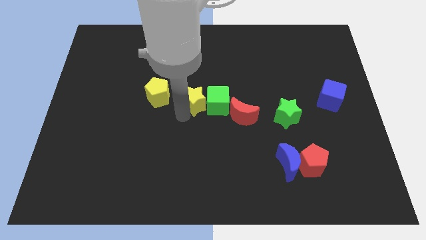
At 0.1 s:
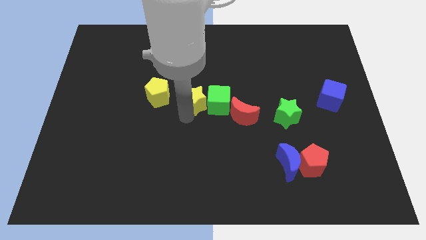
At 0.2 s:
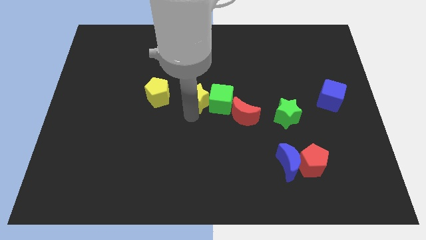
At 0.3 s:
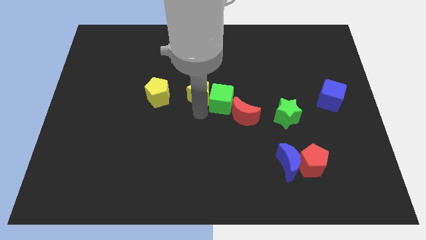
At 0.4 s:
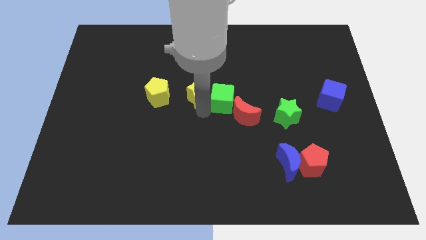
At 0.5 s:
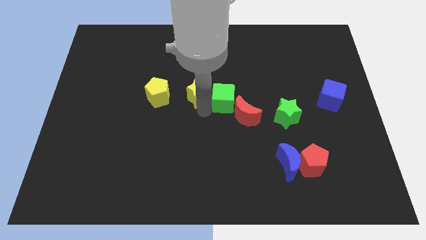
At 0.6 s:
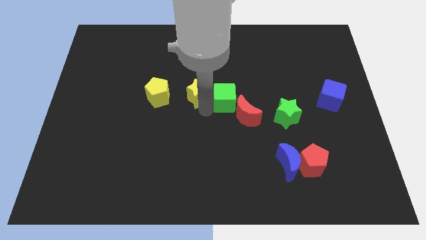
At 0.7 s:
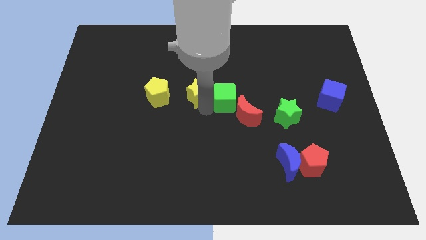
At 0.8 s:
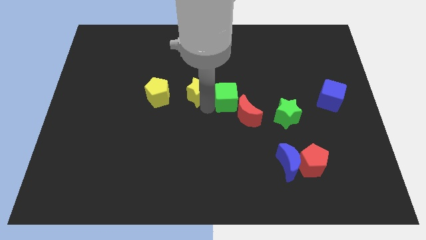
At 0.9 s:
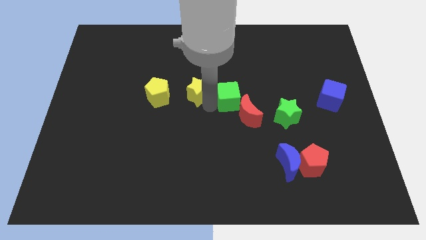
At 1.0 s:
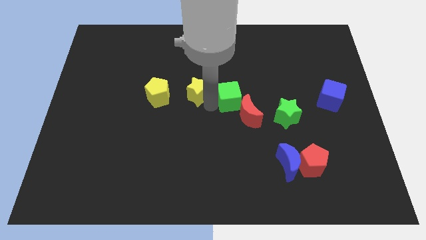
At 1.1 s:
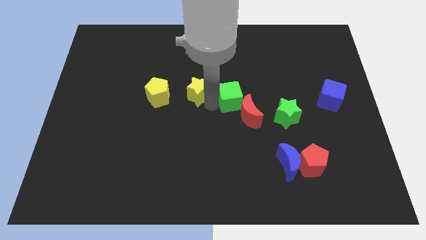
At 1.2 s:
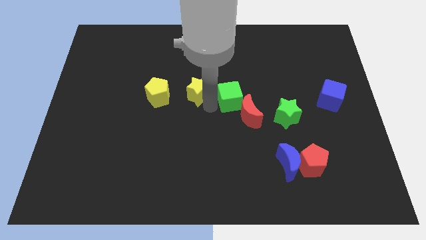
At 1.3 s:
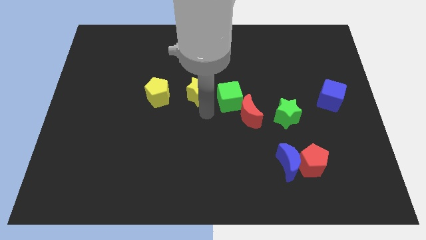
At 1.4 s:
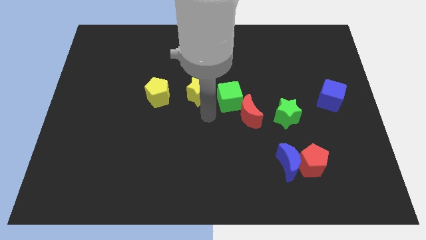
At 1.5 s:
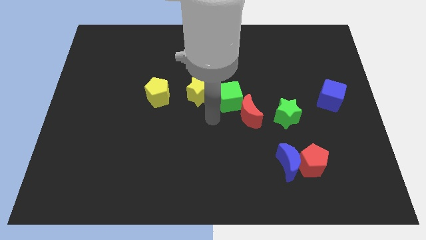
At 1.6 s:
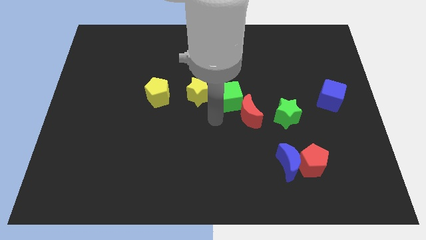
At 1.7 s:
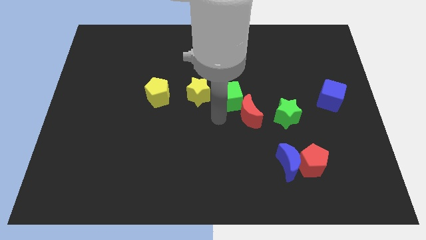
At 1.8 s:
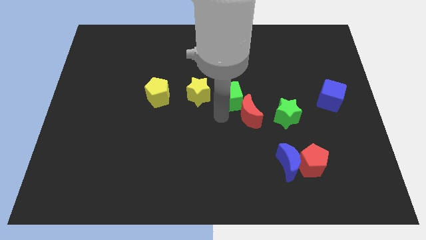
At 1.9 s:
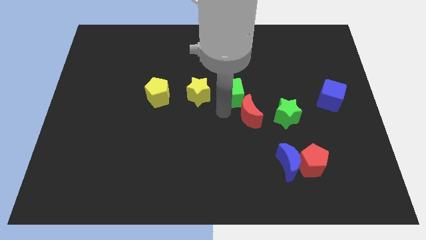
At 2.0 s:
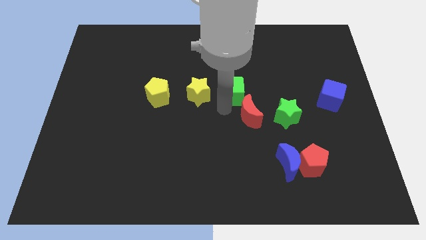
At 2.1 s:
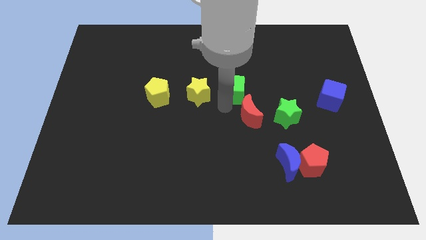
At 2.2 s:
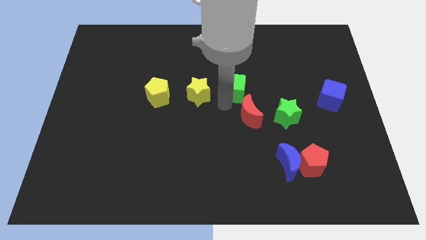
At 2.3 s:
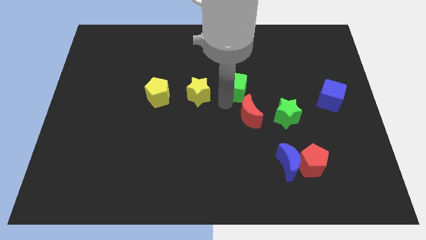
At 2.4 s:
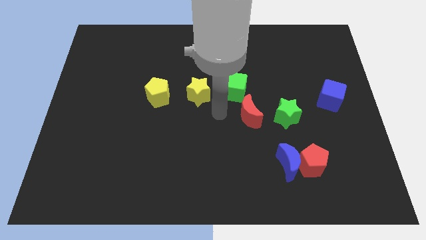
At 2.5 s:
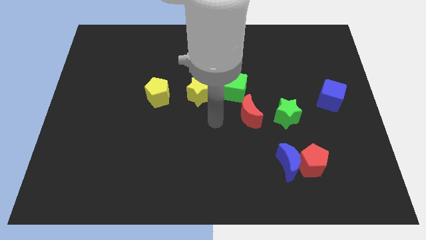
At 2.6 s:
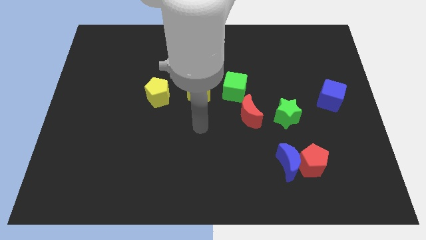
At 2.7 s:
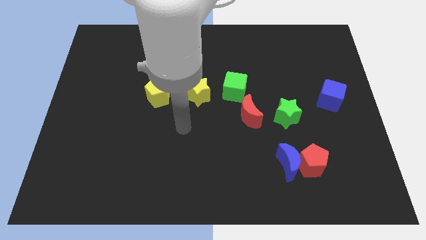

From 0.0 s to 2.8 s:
separate green cube and yellow star

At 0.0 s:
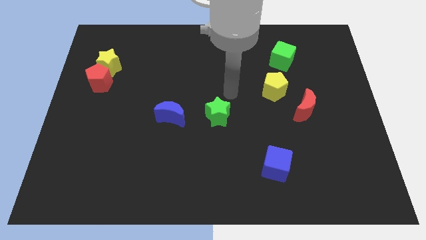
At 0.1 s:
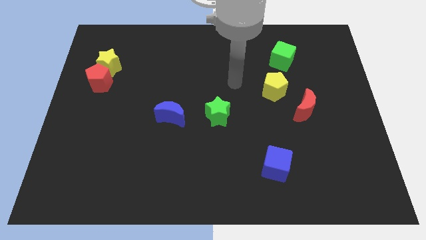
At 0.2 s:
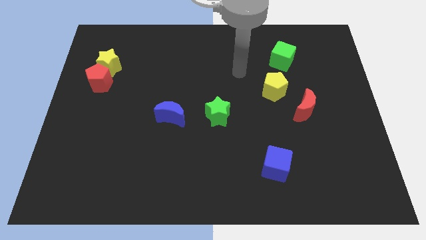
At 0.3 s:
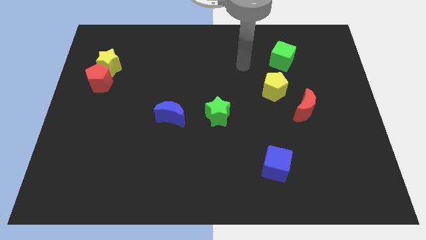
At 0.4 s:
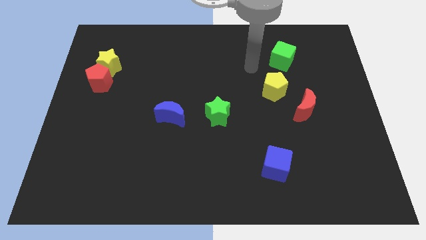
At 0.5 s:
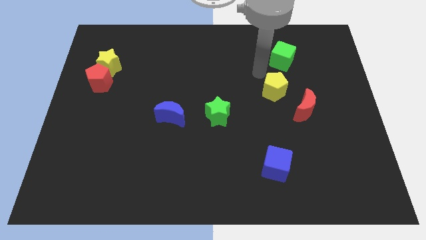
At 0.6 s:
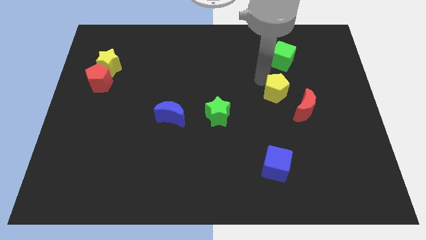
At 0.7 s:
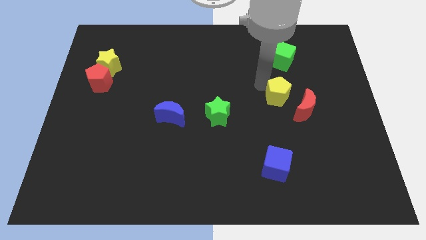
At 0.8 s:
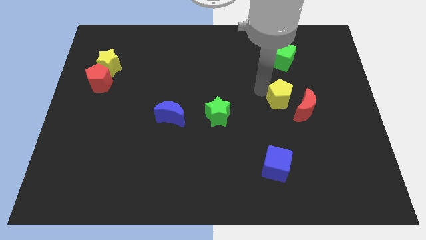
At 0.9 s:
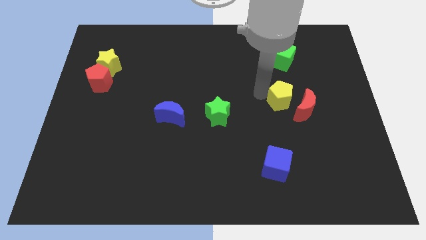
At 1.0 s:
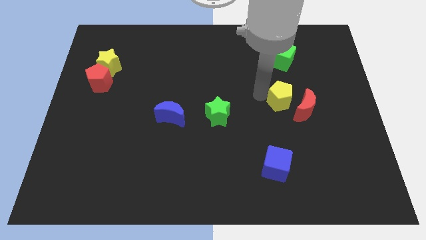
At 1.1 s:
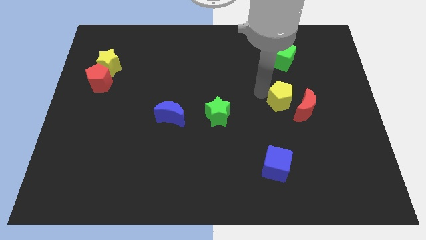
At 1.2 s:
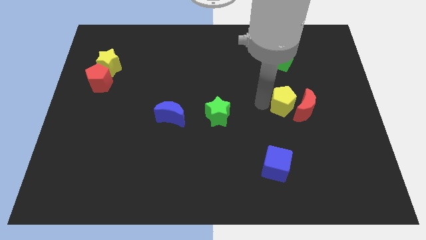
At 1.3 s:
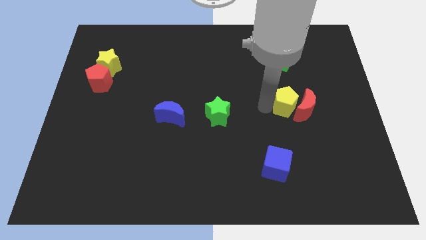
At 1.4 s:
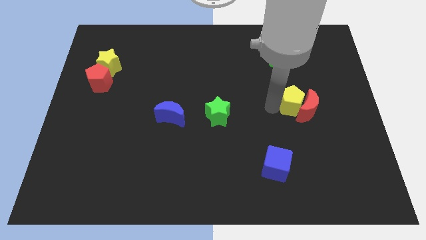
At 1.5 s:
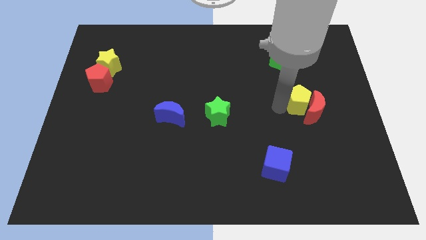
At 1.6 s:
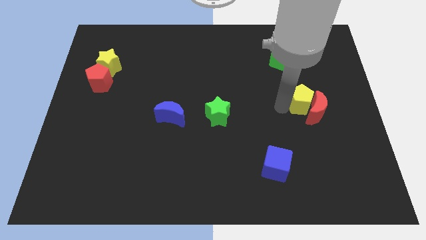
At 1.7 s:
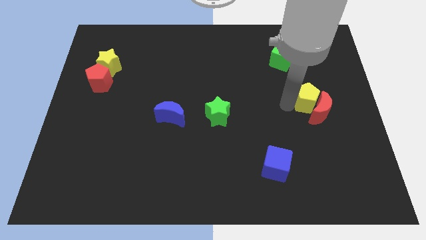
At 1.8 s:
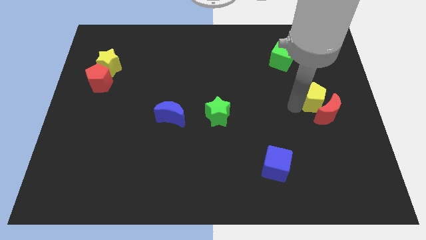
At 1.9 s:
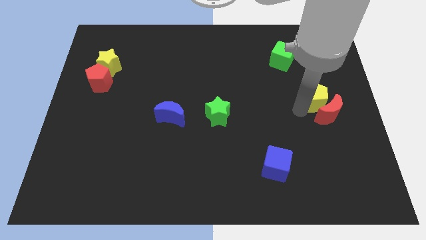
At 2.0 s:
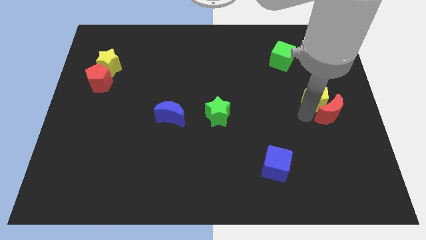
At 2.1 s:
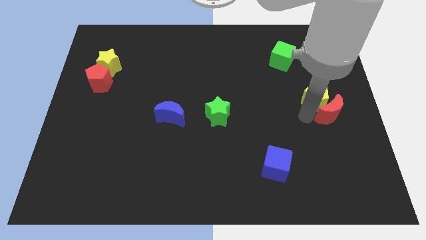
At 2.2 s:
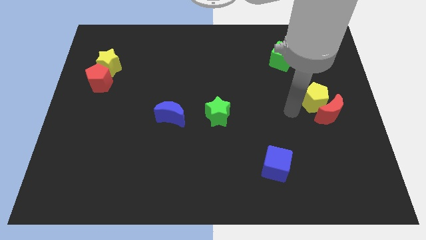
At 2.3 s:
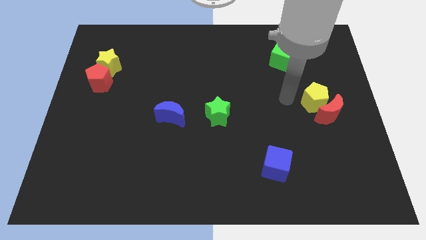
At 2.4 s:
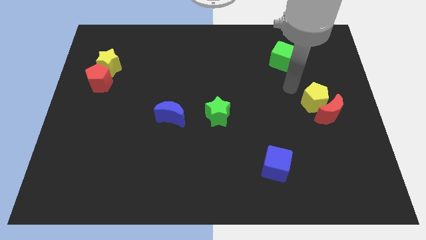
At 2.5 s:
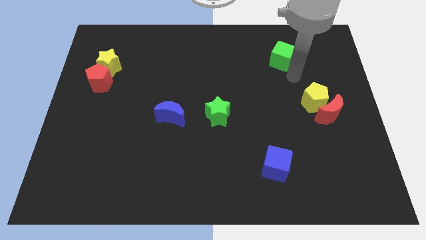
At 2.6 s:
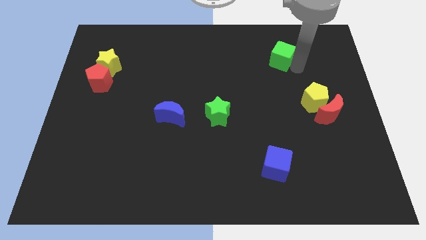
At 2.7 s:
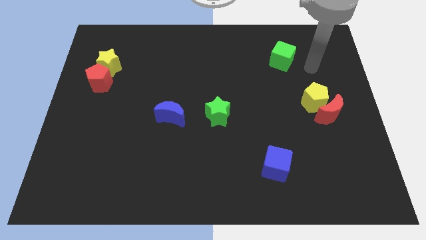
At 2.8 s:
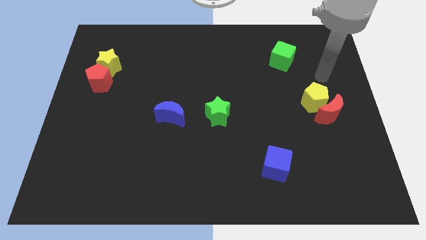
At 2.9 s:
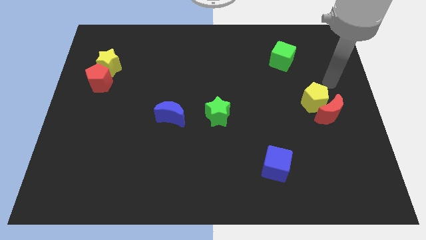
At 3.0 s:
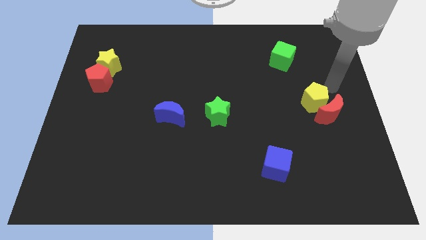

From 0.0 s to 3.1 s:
push yellow pentagon into the red crescent

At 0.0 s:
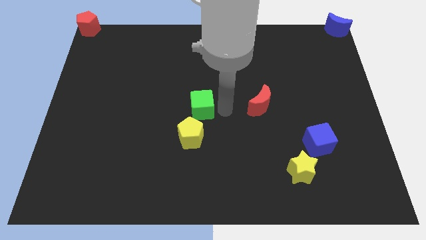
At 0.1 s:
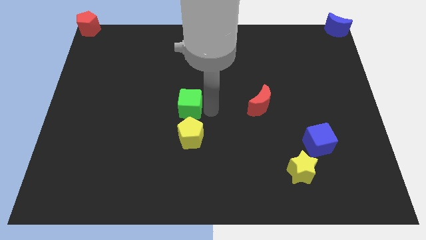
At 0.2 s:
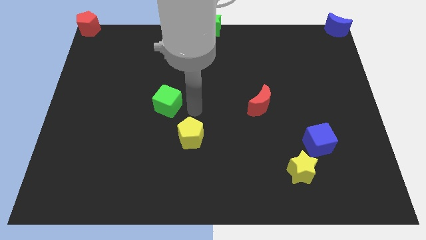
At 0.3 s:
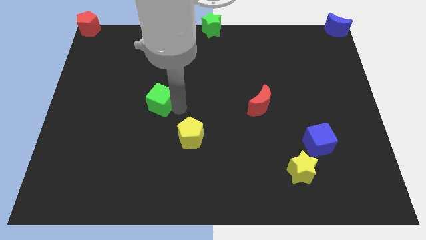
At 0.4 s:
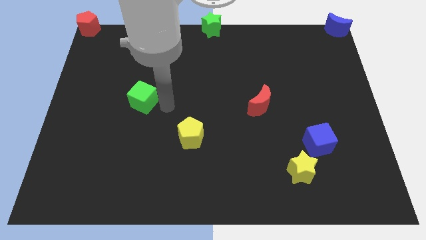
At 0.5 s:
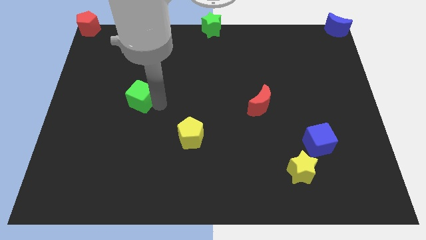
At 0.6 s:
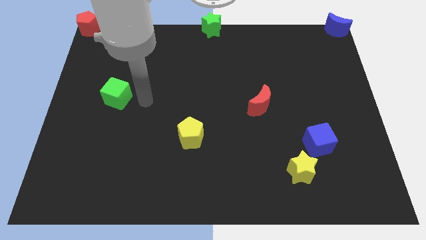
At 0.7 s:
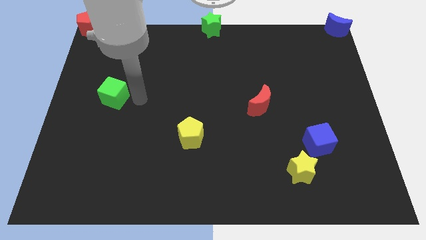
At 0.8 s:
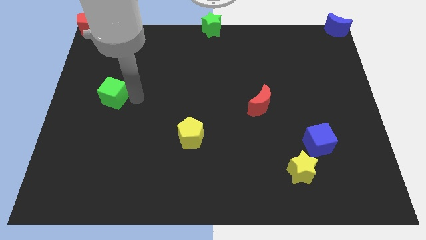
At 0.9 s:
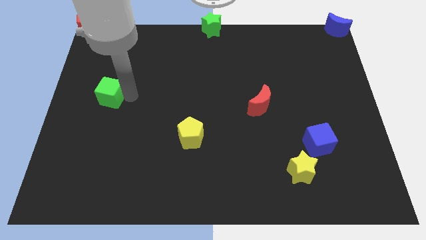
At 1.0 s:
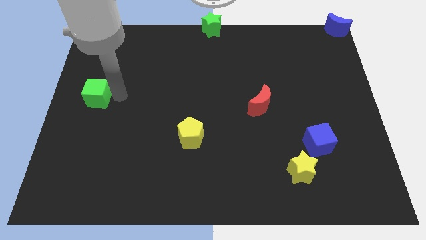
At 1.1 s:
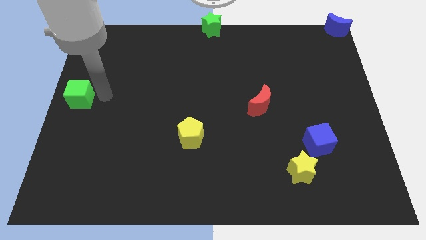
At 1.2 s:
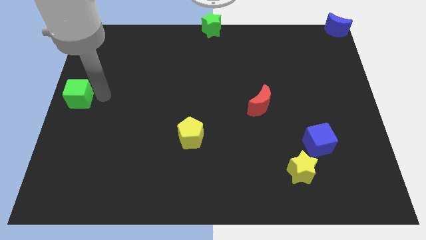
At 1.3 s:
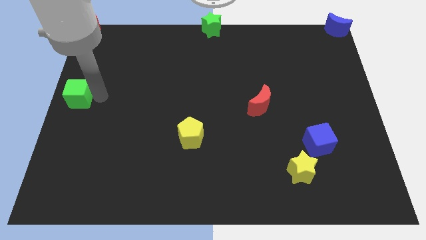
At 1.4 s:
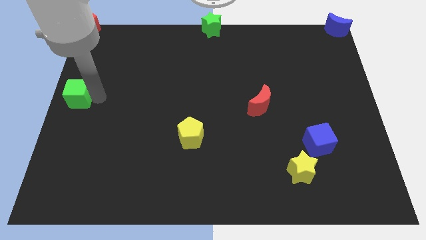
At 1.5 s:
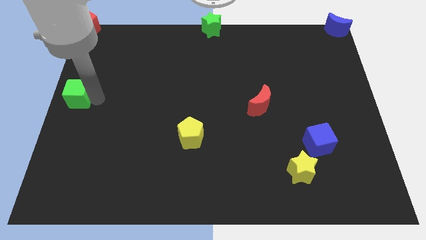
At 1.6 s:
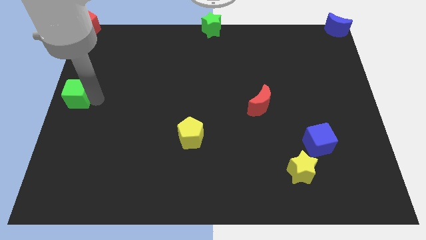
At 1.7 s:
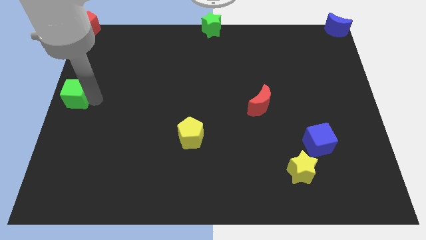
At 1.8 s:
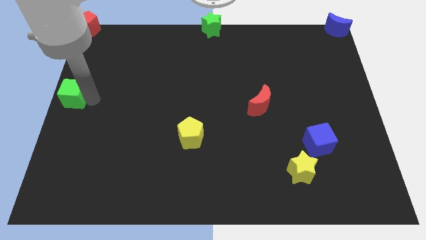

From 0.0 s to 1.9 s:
drag the green cube at the center left

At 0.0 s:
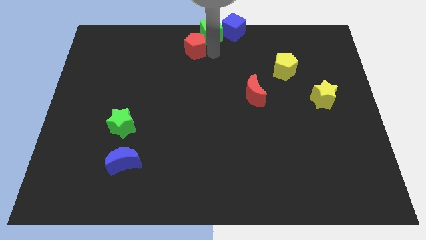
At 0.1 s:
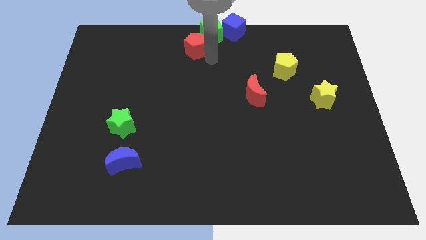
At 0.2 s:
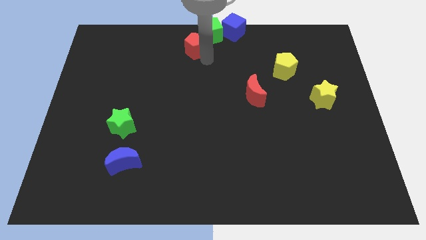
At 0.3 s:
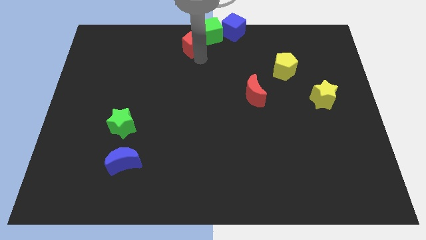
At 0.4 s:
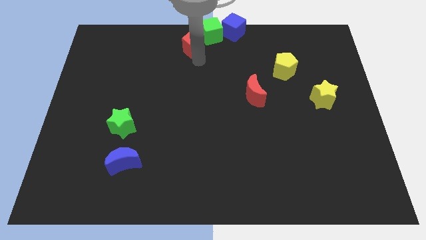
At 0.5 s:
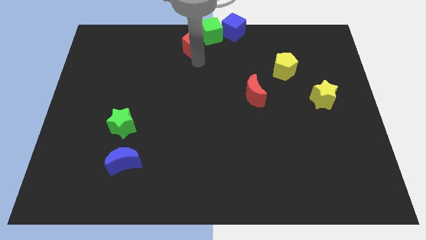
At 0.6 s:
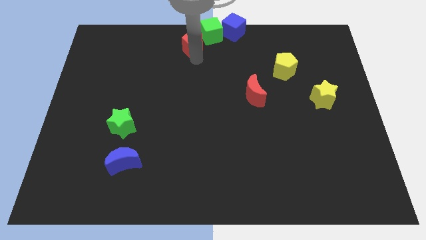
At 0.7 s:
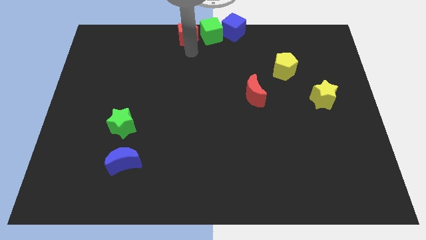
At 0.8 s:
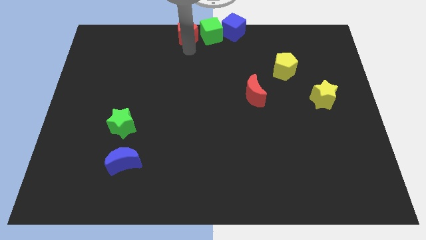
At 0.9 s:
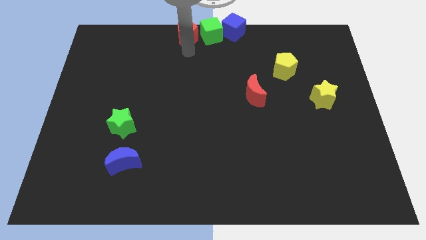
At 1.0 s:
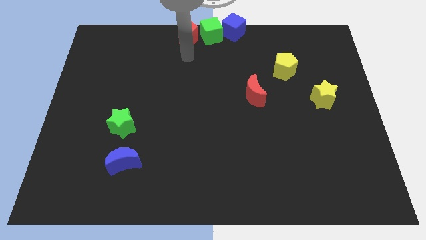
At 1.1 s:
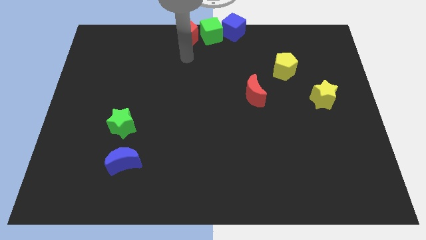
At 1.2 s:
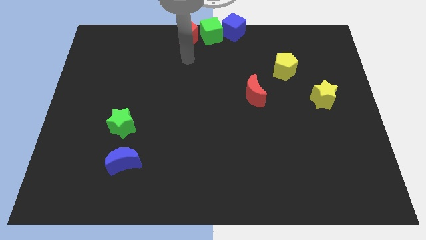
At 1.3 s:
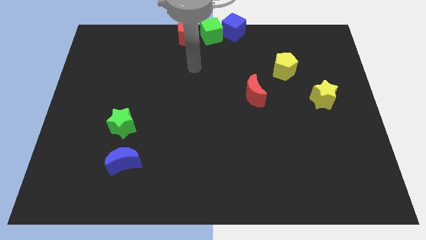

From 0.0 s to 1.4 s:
place red pentagon to the left side of the green cube
